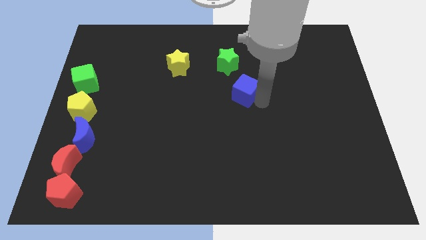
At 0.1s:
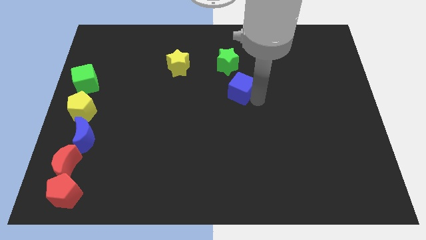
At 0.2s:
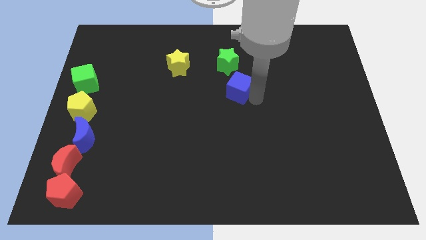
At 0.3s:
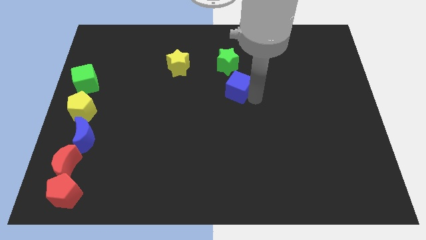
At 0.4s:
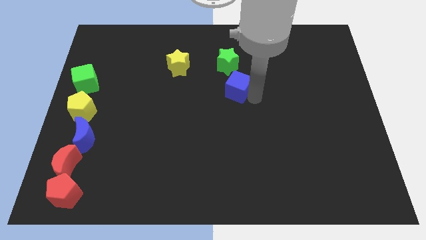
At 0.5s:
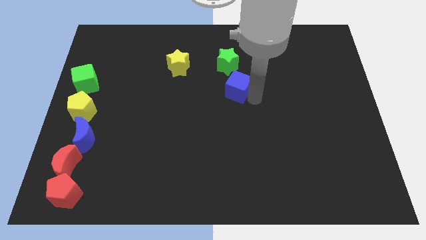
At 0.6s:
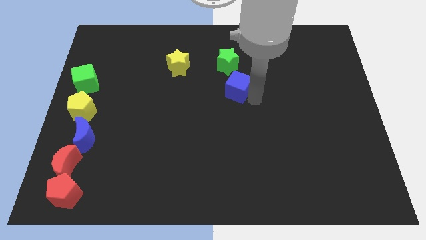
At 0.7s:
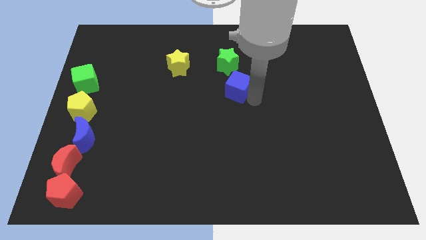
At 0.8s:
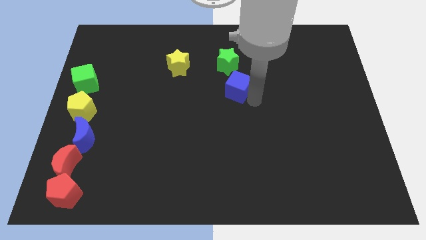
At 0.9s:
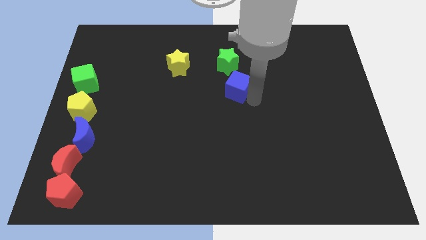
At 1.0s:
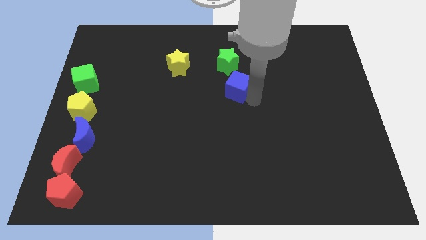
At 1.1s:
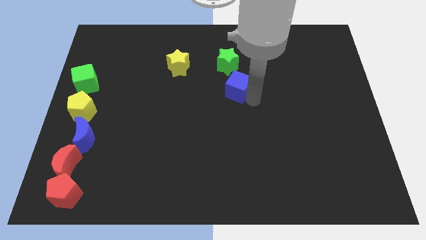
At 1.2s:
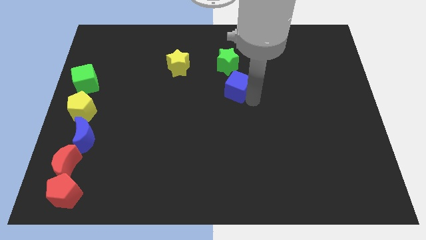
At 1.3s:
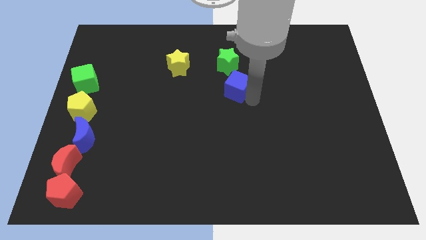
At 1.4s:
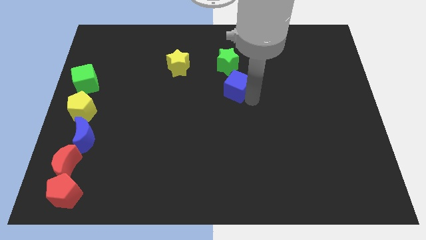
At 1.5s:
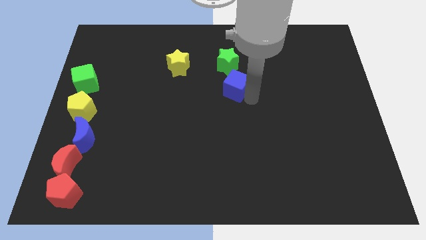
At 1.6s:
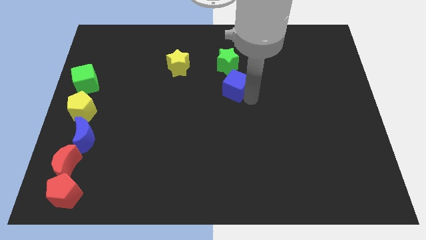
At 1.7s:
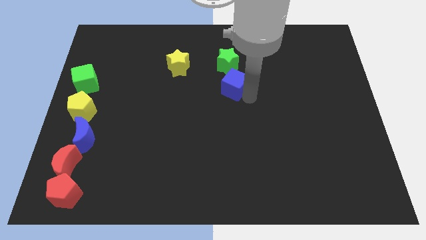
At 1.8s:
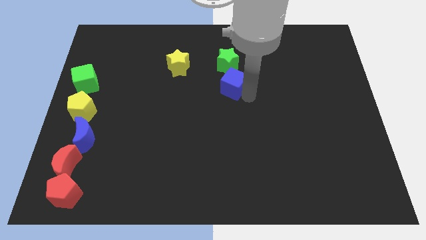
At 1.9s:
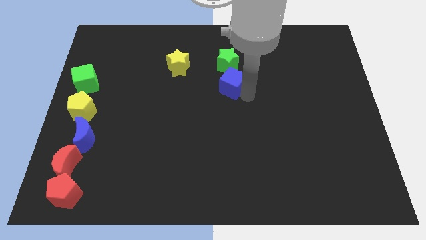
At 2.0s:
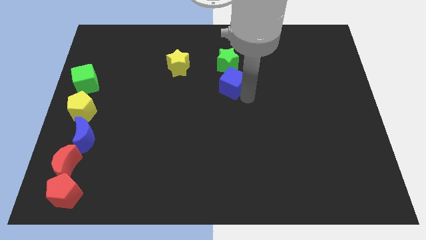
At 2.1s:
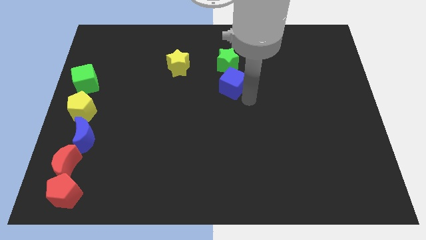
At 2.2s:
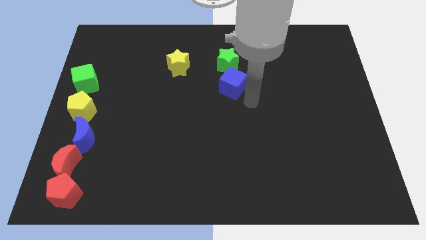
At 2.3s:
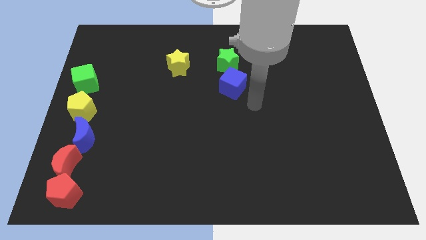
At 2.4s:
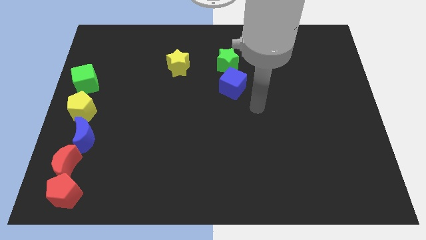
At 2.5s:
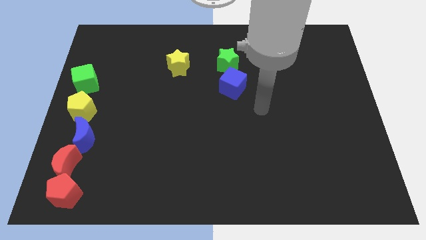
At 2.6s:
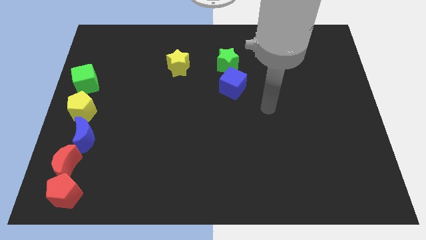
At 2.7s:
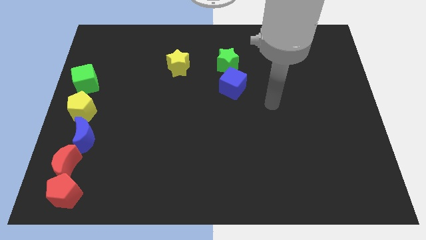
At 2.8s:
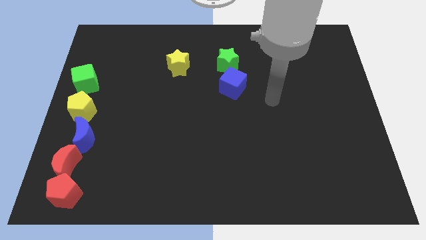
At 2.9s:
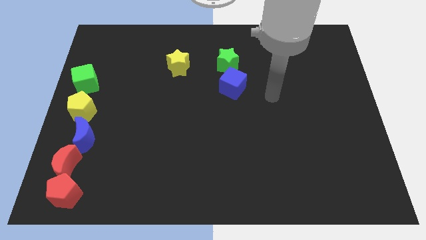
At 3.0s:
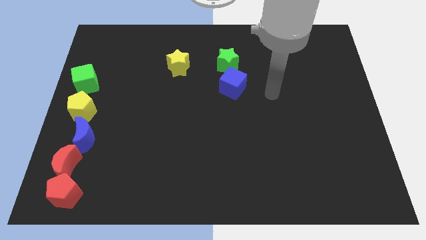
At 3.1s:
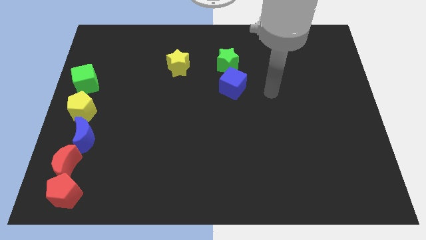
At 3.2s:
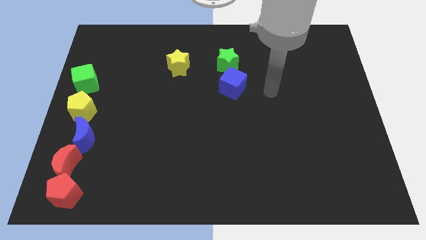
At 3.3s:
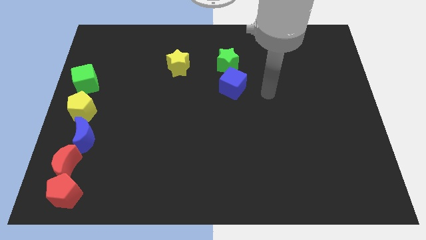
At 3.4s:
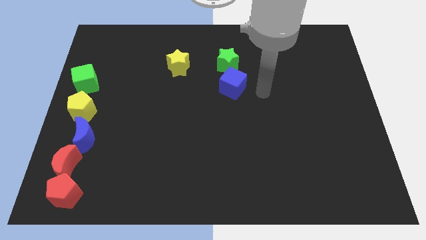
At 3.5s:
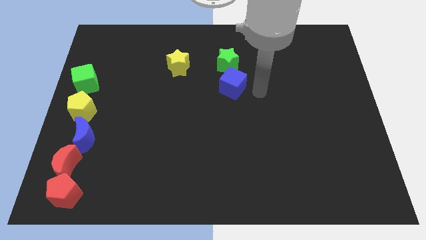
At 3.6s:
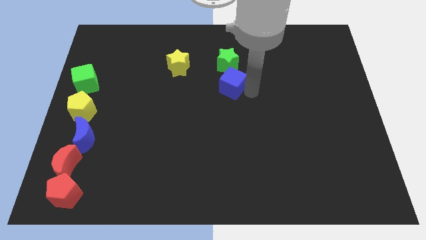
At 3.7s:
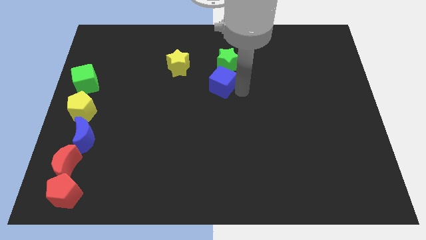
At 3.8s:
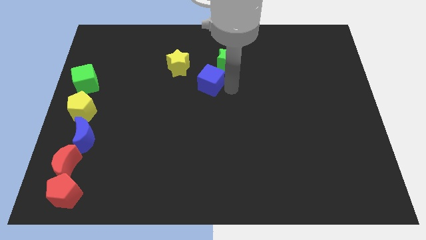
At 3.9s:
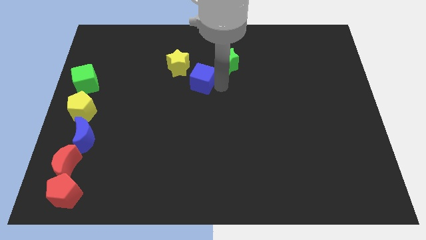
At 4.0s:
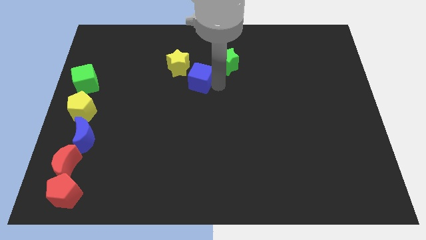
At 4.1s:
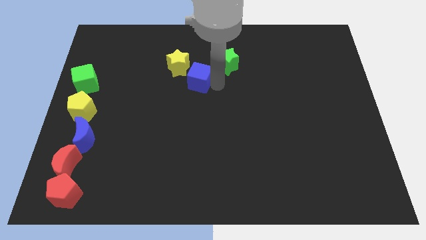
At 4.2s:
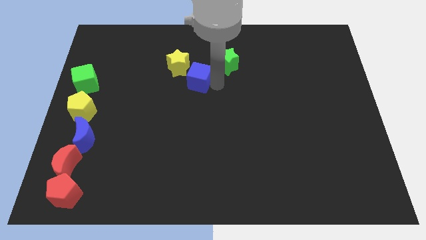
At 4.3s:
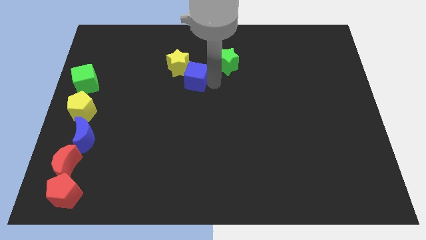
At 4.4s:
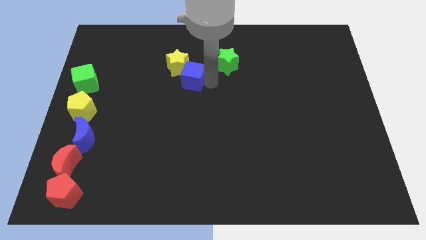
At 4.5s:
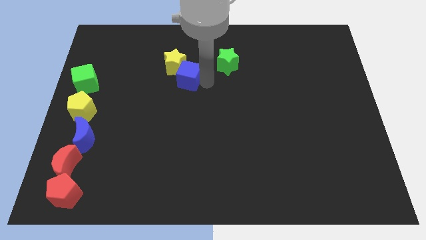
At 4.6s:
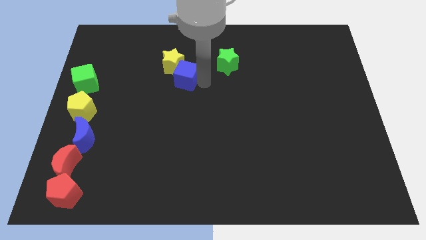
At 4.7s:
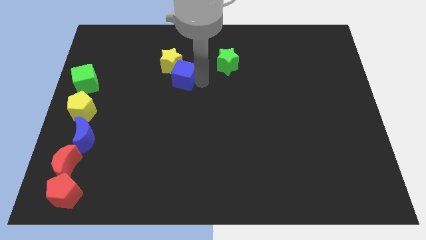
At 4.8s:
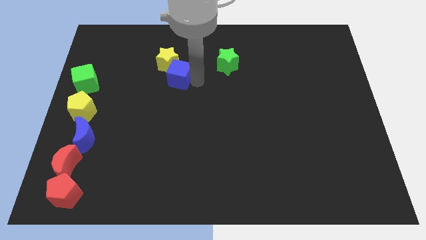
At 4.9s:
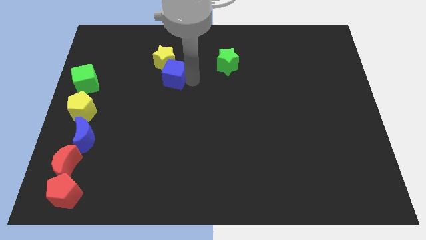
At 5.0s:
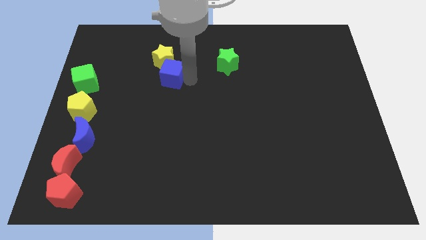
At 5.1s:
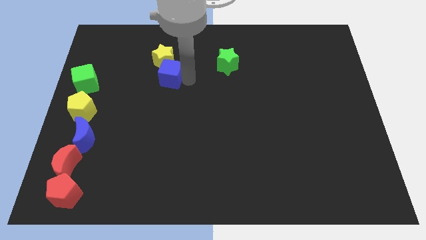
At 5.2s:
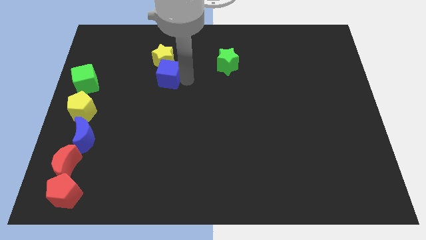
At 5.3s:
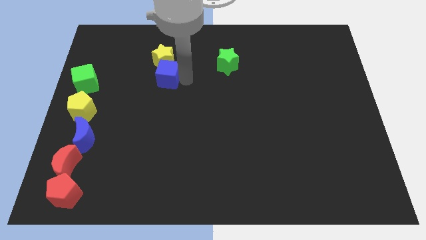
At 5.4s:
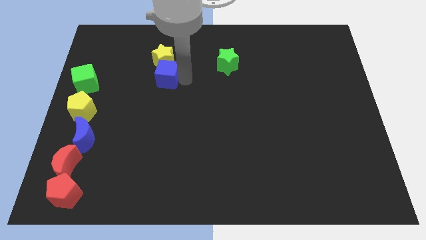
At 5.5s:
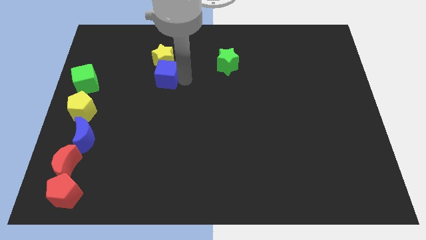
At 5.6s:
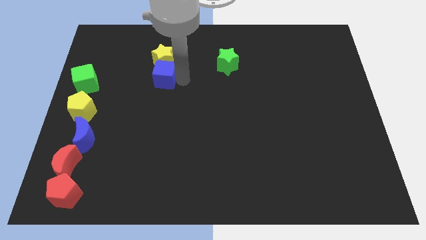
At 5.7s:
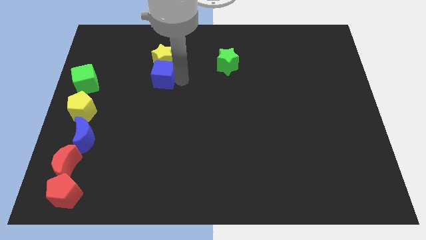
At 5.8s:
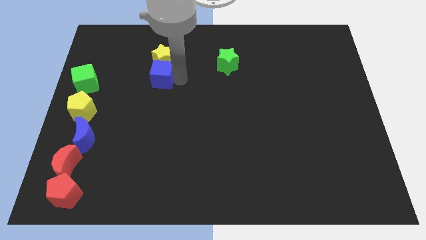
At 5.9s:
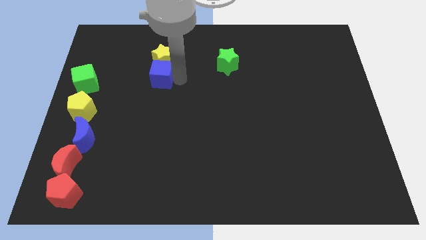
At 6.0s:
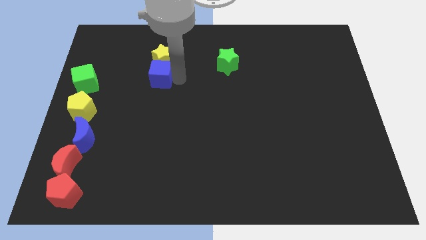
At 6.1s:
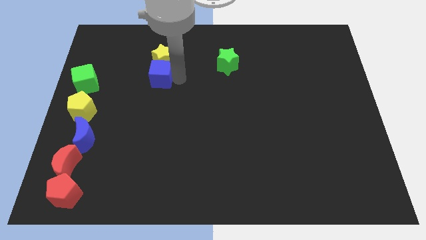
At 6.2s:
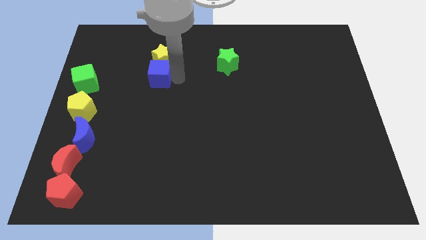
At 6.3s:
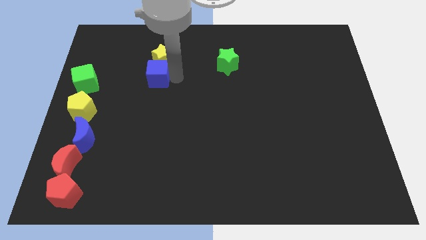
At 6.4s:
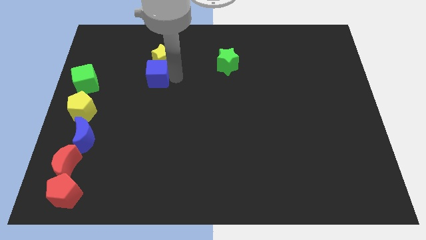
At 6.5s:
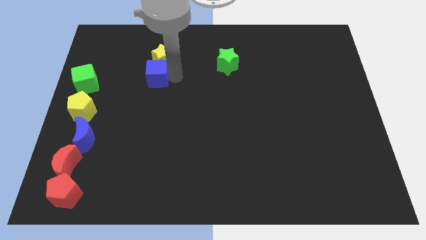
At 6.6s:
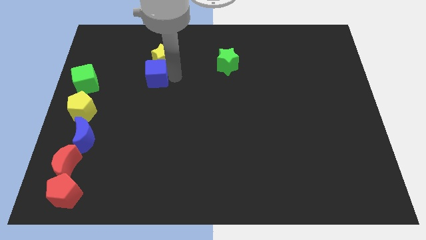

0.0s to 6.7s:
place the blue cube at the bottom of the yellow star

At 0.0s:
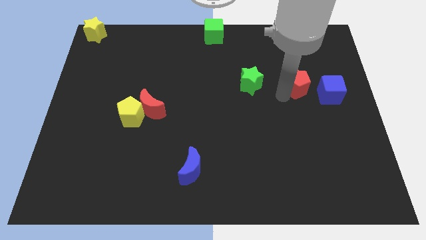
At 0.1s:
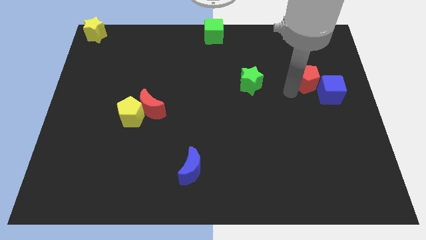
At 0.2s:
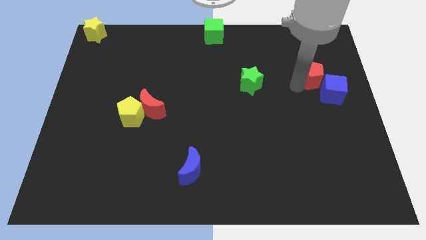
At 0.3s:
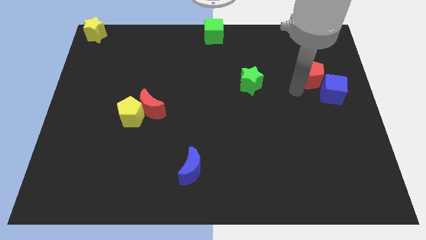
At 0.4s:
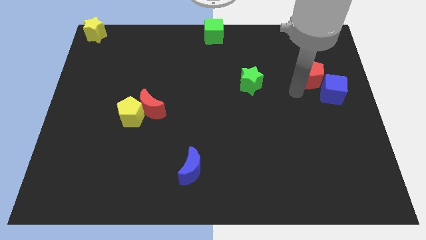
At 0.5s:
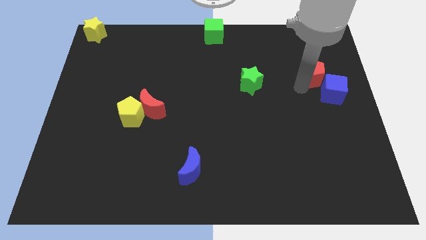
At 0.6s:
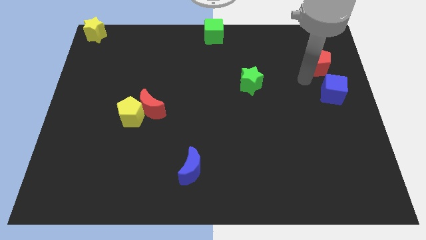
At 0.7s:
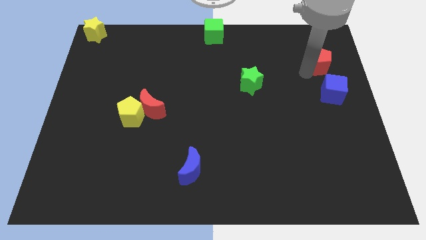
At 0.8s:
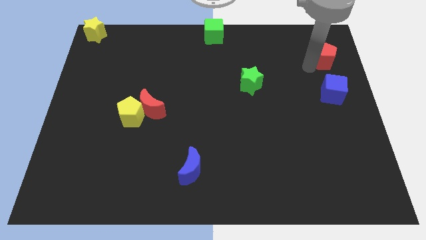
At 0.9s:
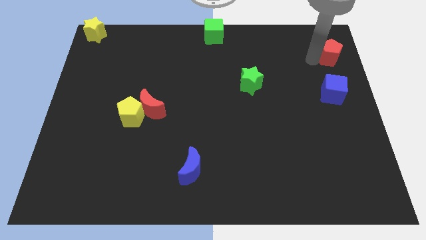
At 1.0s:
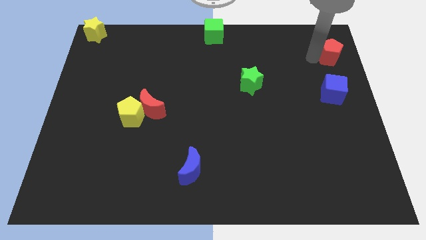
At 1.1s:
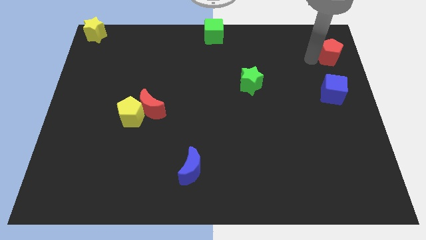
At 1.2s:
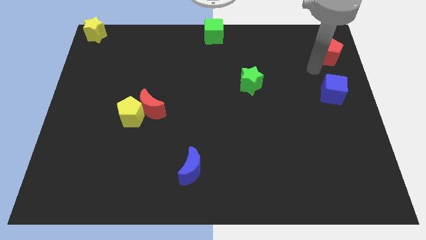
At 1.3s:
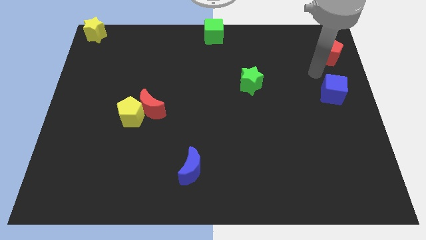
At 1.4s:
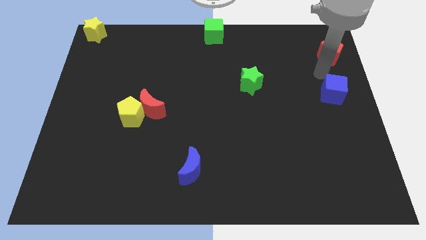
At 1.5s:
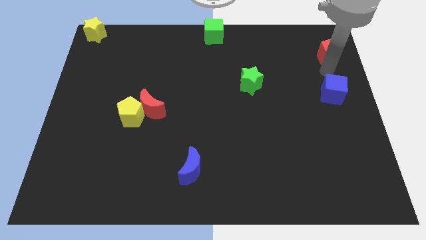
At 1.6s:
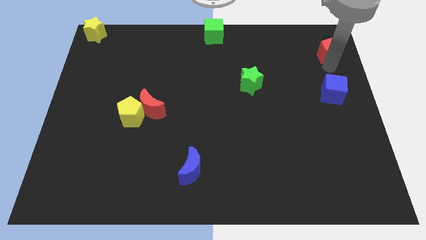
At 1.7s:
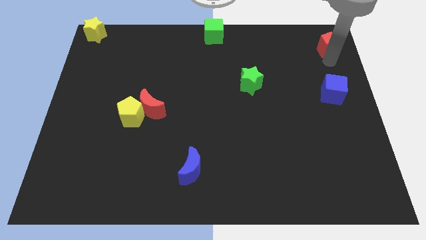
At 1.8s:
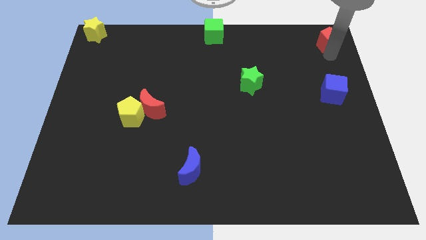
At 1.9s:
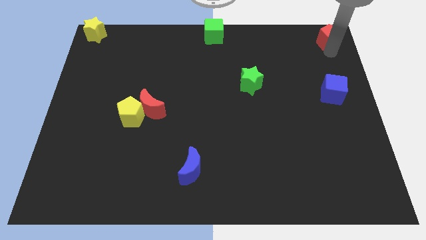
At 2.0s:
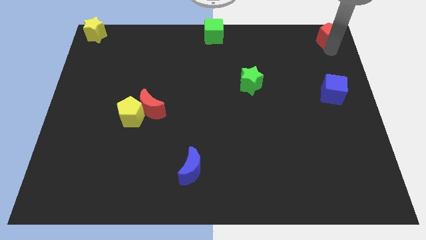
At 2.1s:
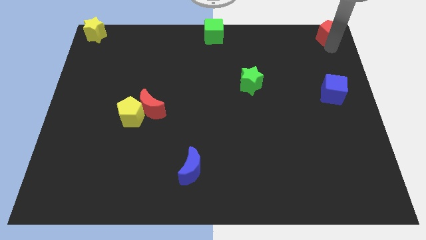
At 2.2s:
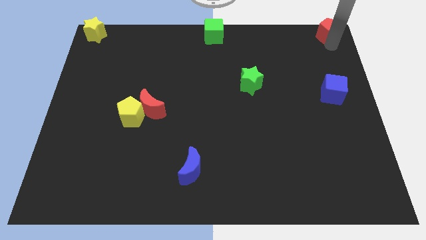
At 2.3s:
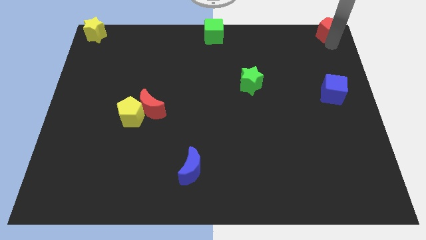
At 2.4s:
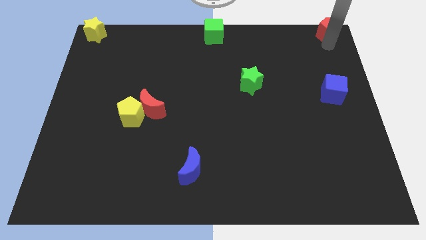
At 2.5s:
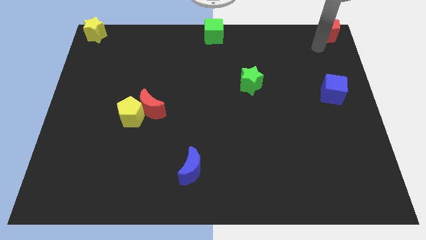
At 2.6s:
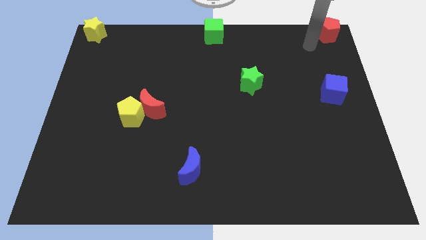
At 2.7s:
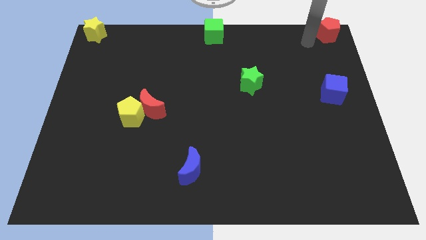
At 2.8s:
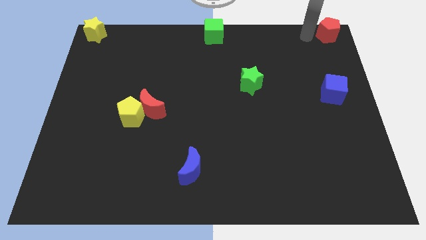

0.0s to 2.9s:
push the red pentagon to the top right of the board
